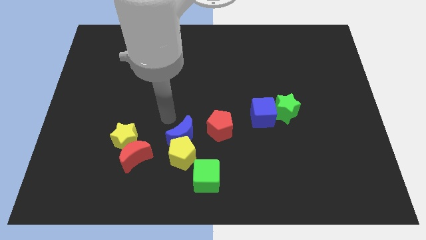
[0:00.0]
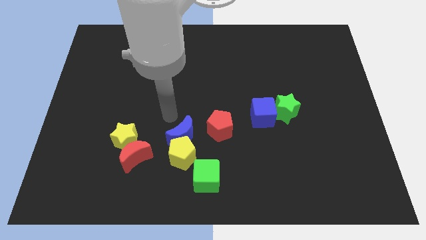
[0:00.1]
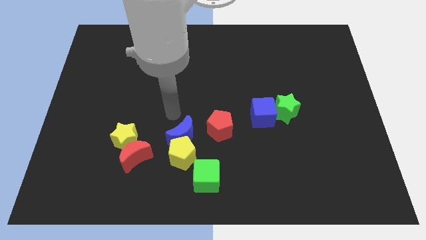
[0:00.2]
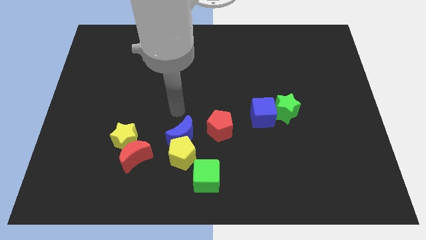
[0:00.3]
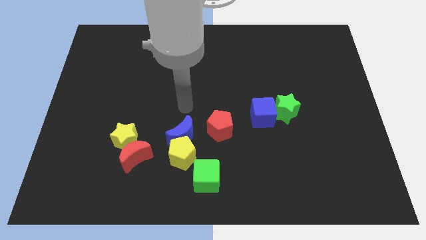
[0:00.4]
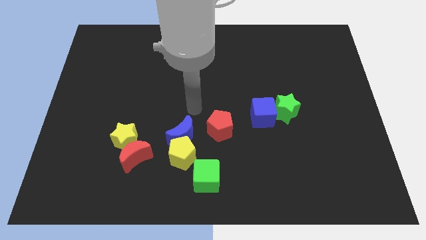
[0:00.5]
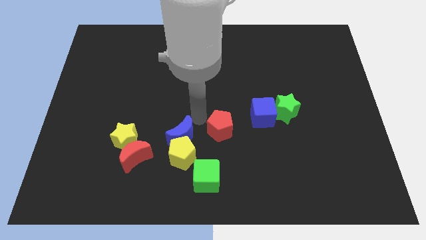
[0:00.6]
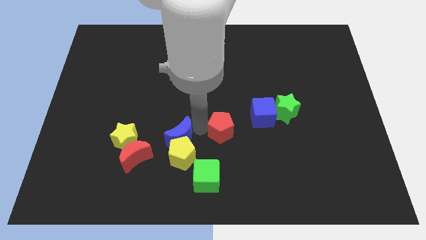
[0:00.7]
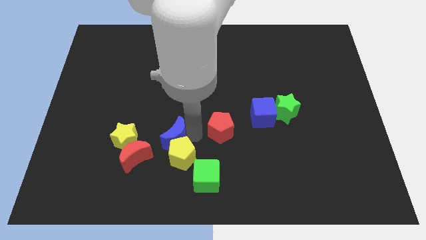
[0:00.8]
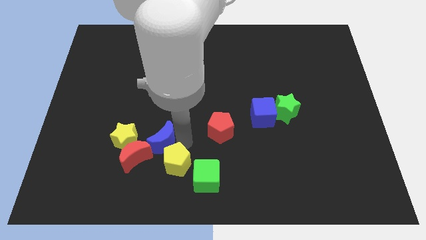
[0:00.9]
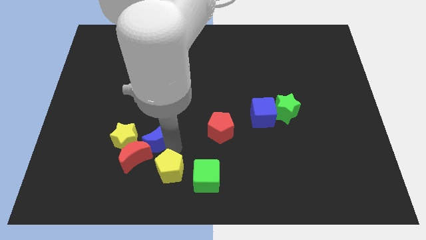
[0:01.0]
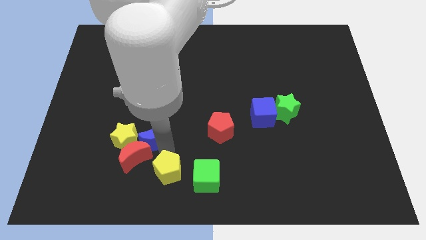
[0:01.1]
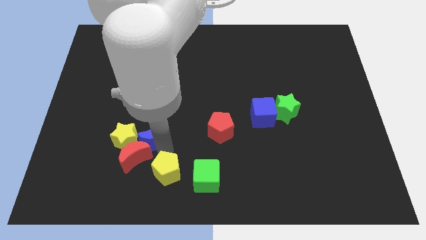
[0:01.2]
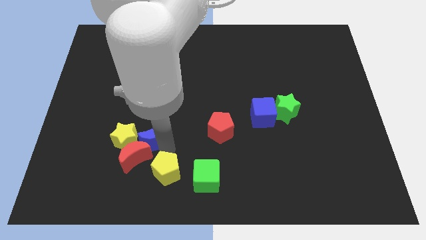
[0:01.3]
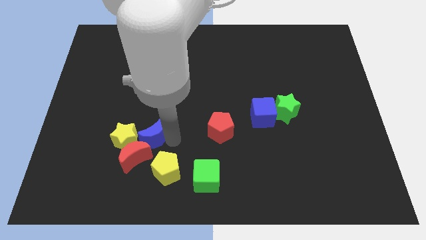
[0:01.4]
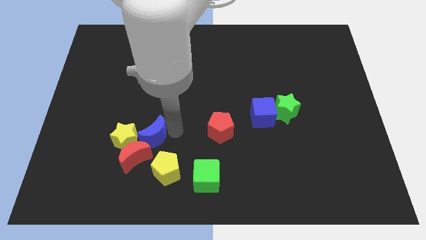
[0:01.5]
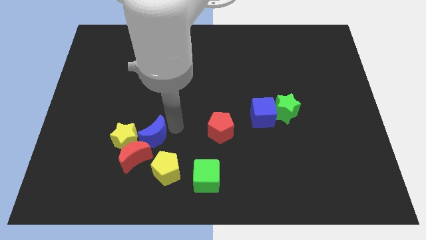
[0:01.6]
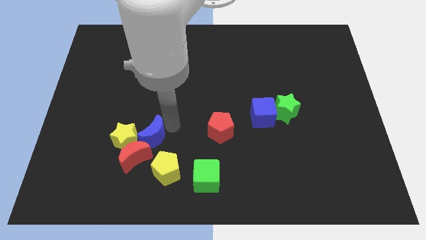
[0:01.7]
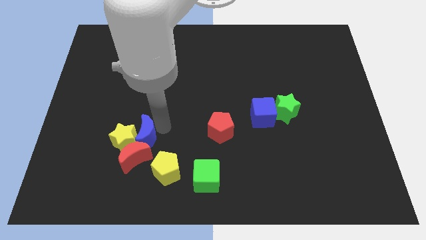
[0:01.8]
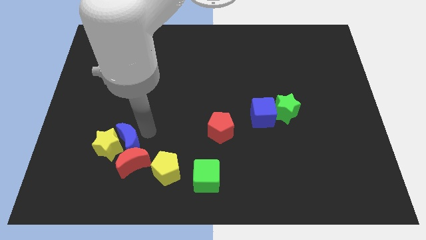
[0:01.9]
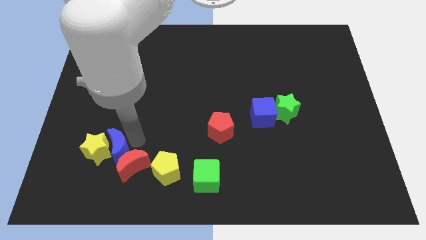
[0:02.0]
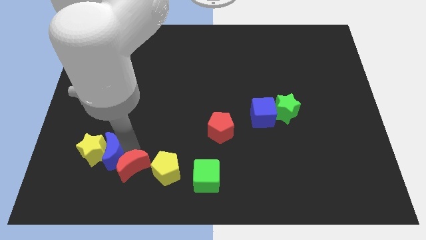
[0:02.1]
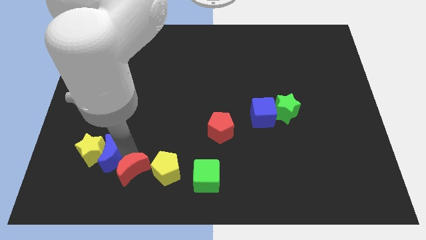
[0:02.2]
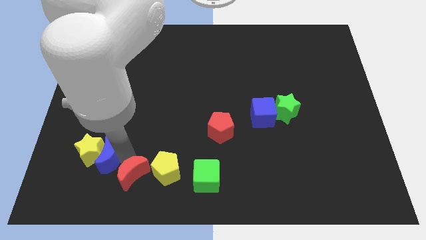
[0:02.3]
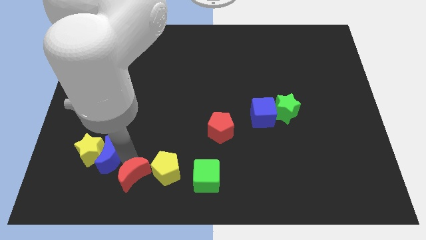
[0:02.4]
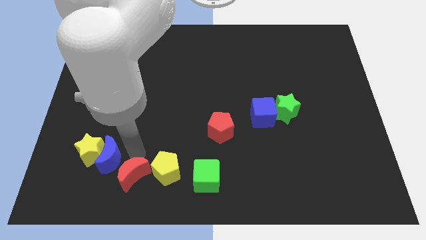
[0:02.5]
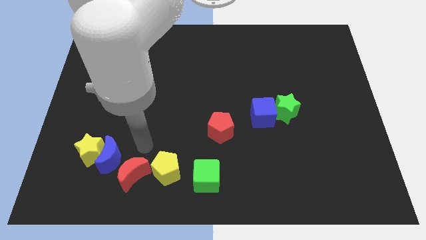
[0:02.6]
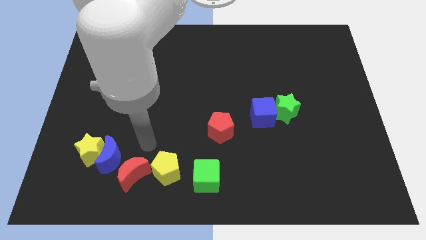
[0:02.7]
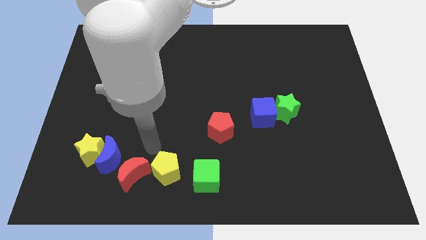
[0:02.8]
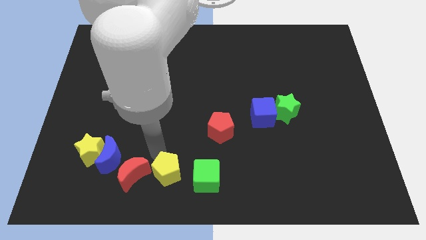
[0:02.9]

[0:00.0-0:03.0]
place blue moon in between the yellow star and red moon

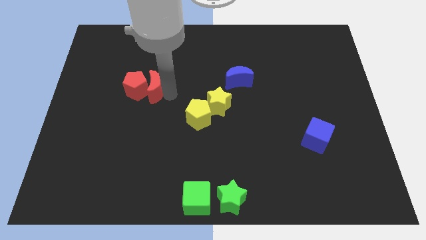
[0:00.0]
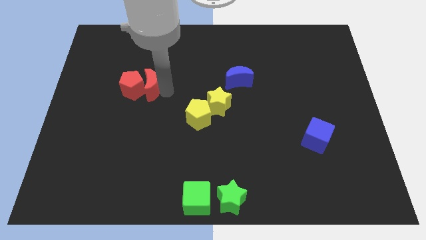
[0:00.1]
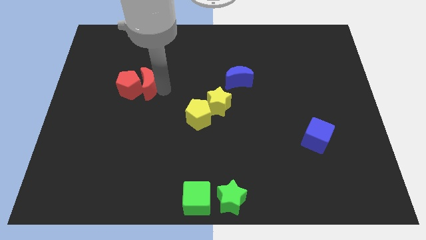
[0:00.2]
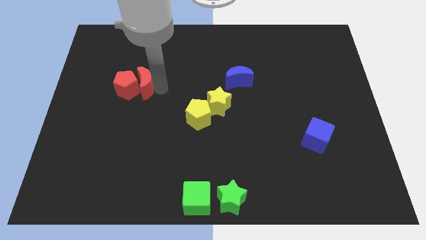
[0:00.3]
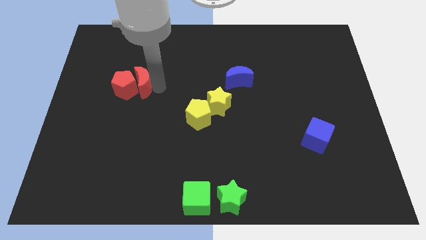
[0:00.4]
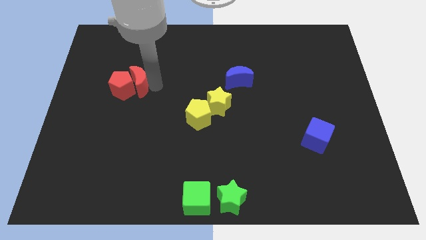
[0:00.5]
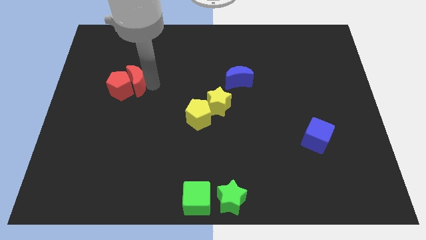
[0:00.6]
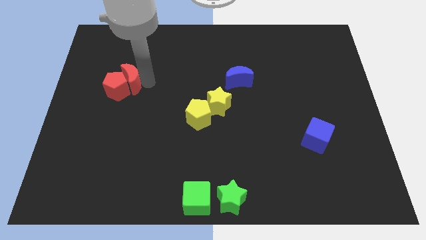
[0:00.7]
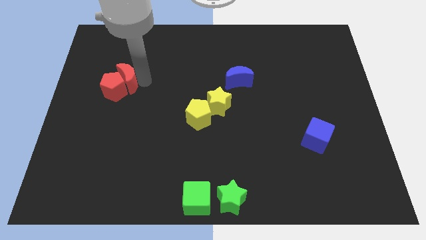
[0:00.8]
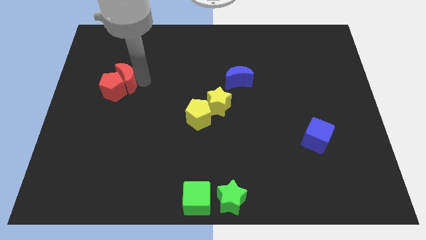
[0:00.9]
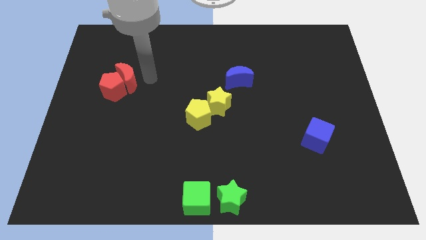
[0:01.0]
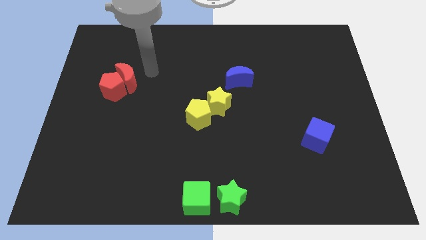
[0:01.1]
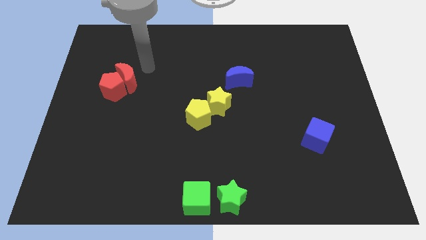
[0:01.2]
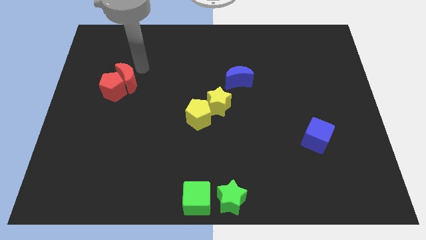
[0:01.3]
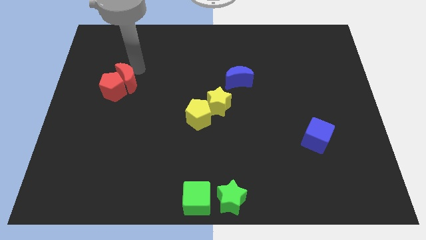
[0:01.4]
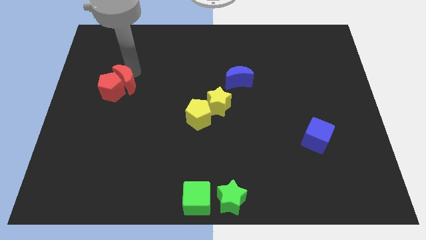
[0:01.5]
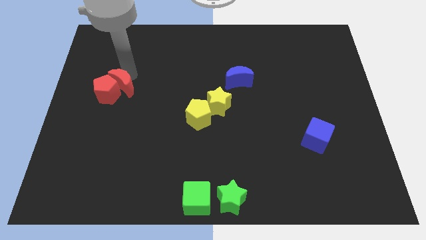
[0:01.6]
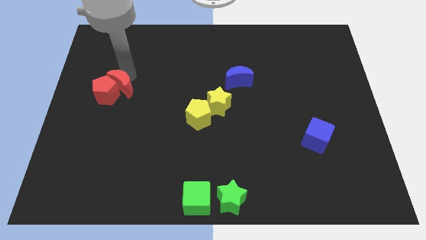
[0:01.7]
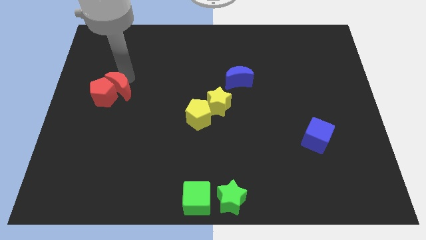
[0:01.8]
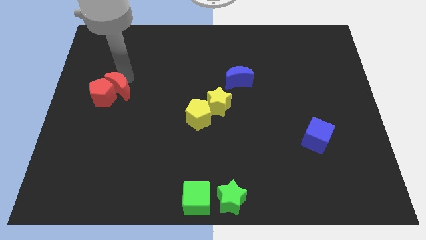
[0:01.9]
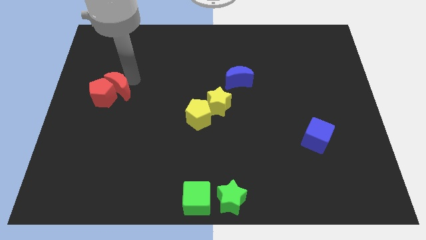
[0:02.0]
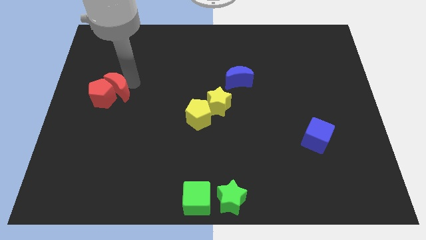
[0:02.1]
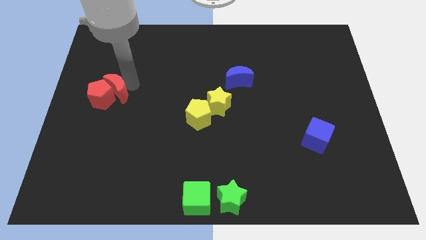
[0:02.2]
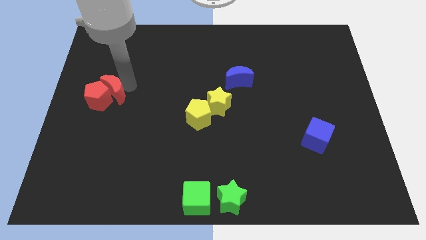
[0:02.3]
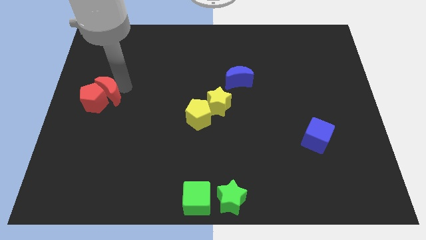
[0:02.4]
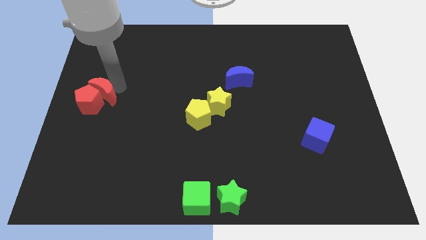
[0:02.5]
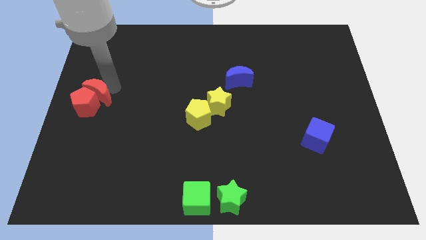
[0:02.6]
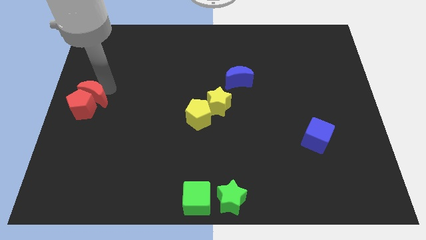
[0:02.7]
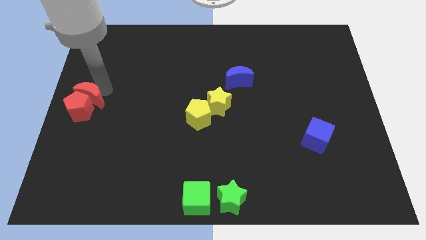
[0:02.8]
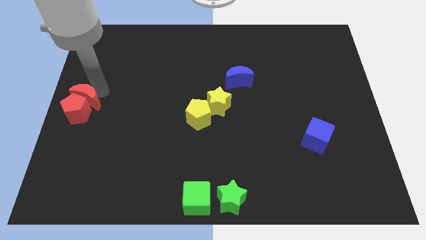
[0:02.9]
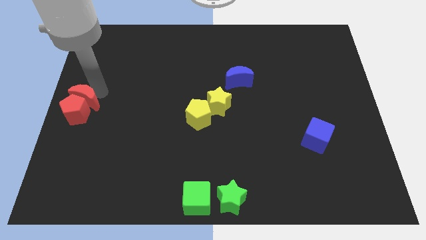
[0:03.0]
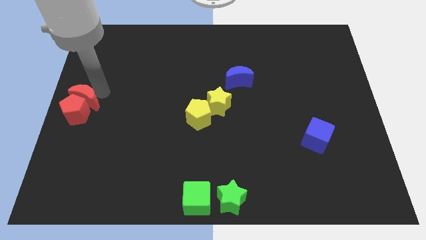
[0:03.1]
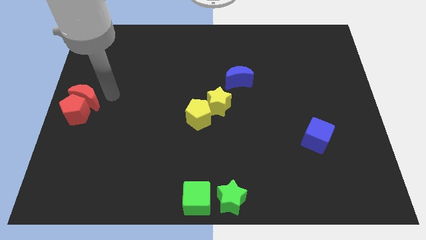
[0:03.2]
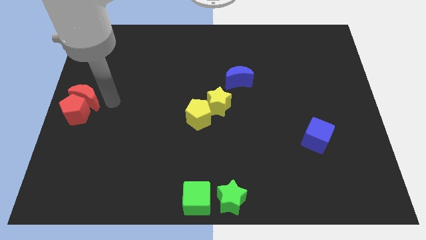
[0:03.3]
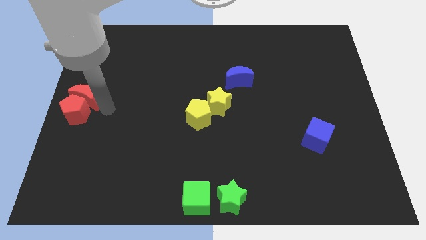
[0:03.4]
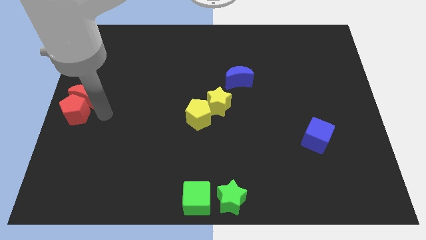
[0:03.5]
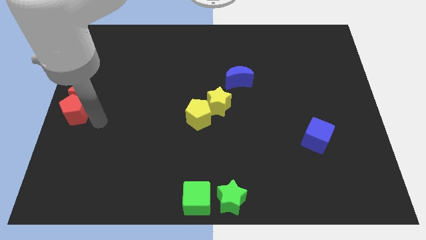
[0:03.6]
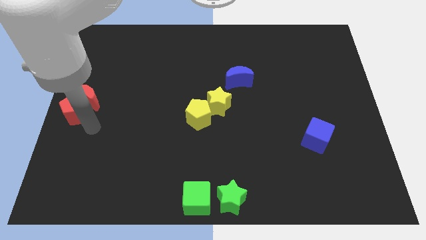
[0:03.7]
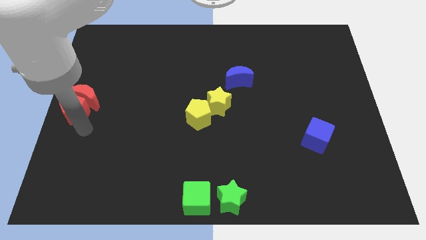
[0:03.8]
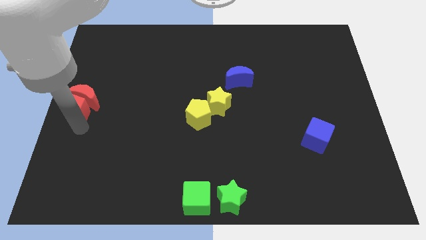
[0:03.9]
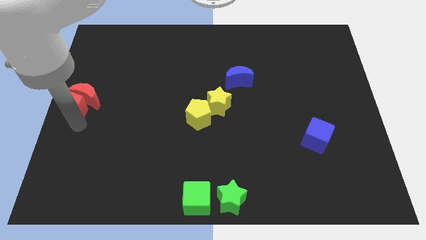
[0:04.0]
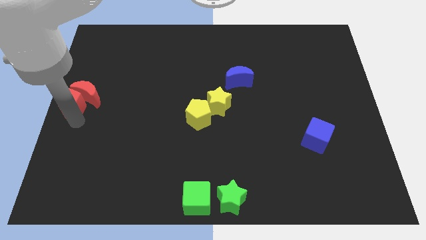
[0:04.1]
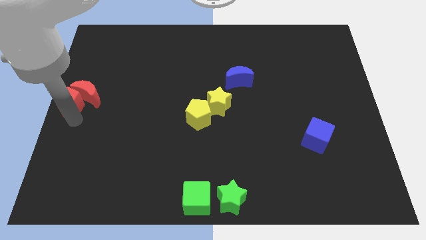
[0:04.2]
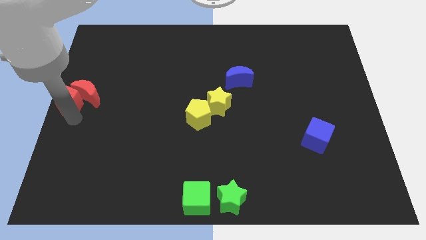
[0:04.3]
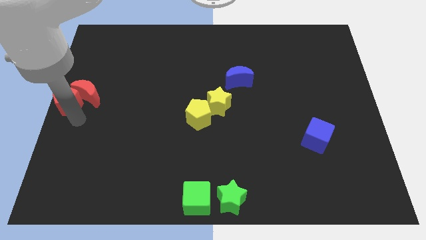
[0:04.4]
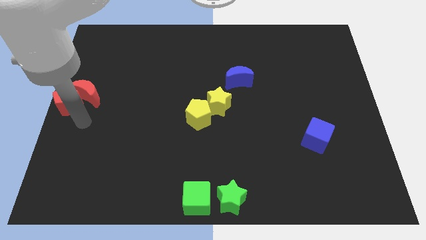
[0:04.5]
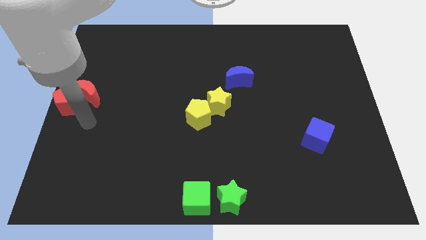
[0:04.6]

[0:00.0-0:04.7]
push red pentagon to the center left

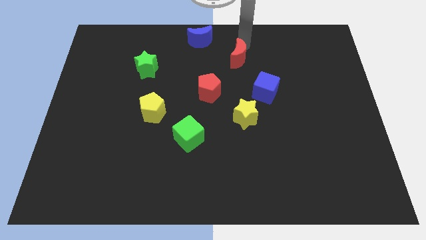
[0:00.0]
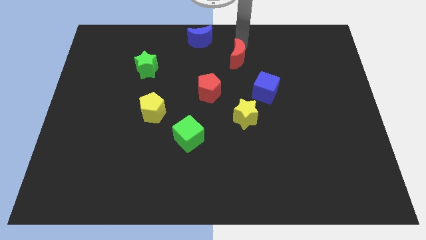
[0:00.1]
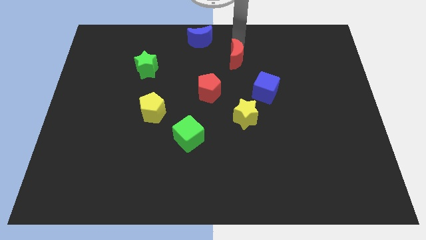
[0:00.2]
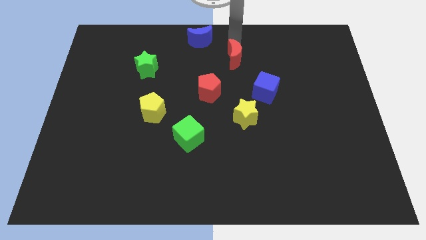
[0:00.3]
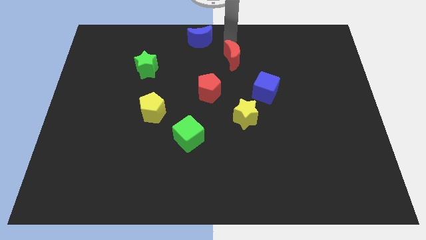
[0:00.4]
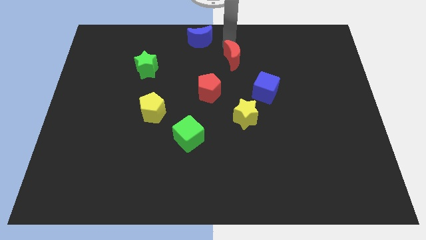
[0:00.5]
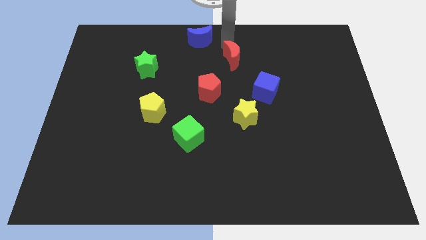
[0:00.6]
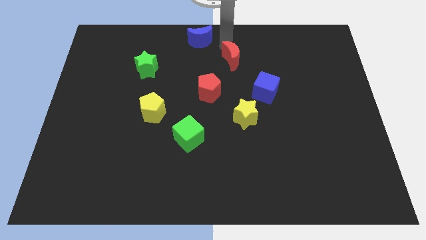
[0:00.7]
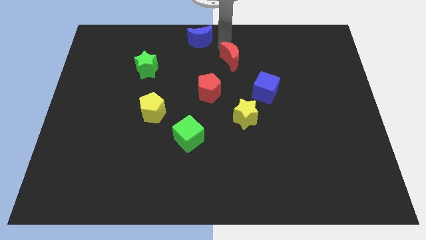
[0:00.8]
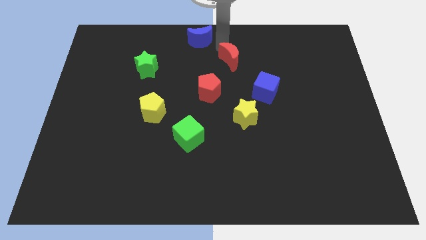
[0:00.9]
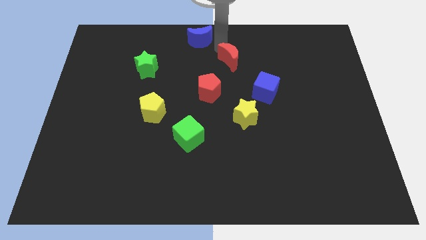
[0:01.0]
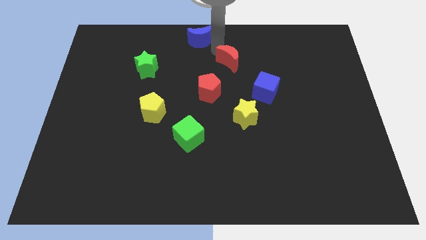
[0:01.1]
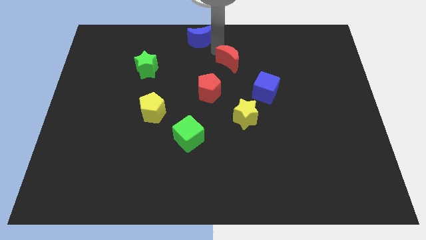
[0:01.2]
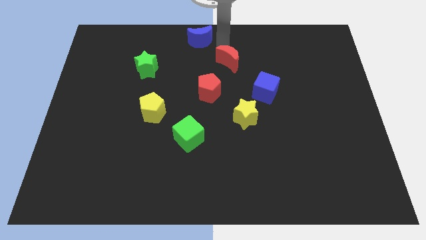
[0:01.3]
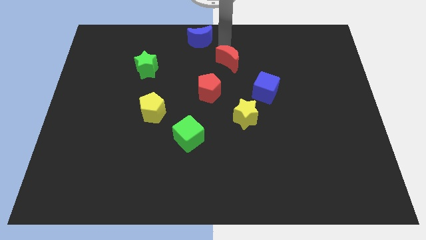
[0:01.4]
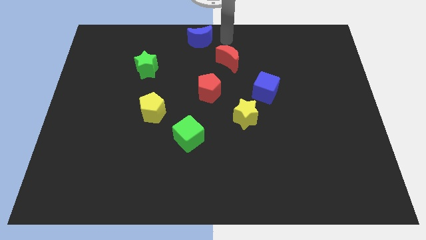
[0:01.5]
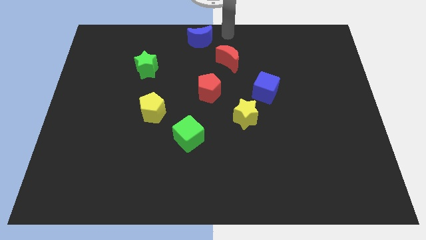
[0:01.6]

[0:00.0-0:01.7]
move the red moon slightly towards red pentagon
